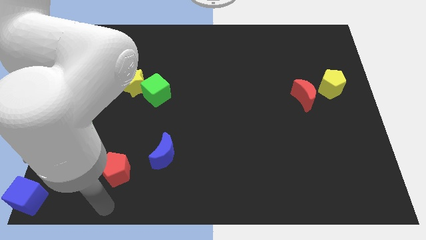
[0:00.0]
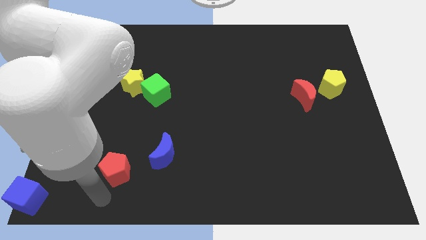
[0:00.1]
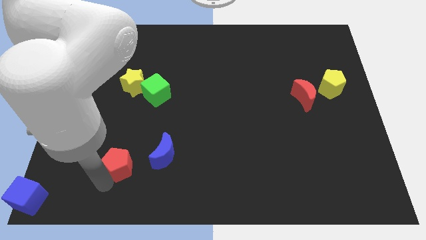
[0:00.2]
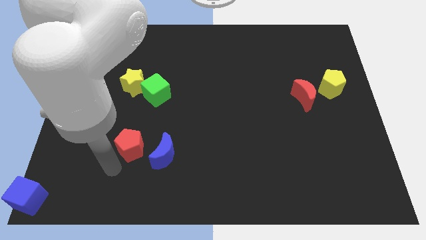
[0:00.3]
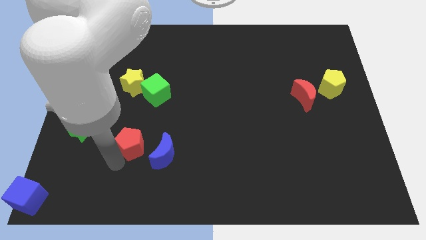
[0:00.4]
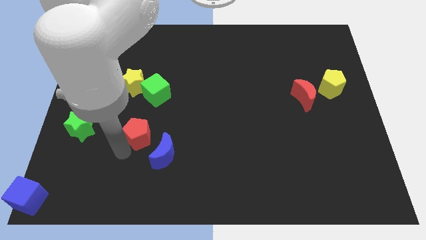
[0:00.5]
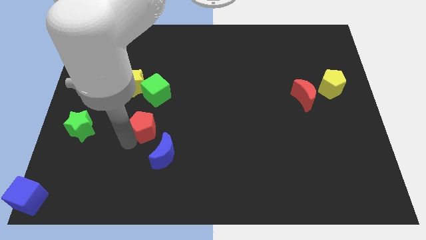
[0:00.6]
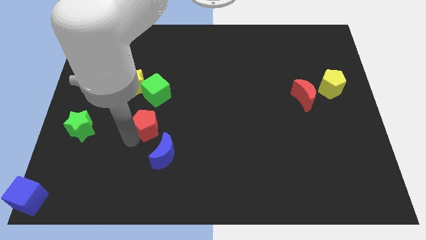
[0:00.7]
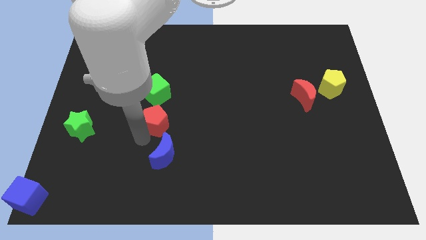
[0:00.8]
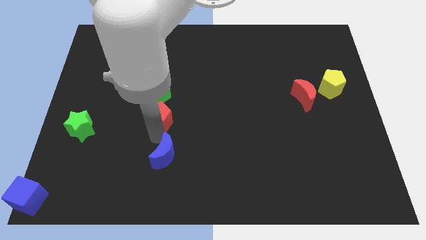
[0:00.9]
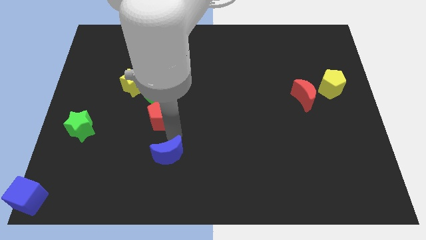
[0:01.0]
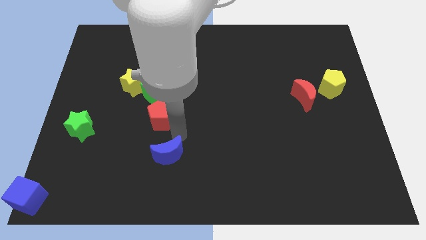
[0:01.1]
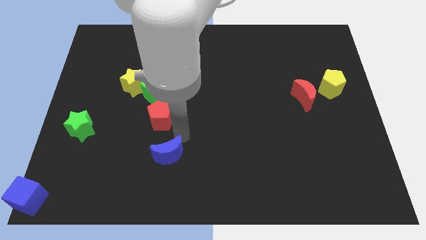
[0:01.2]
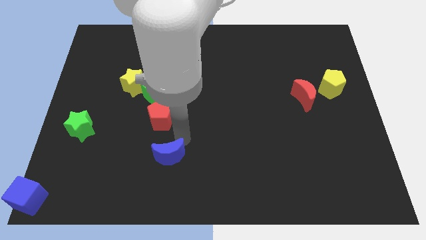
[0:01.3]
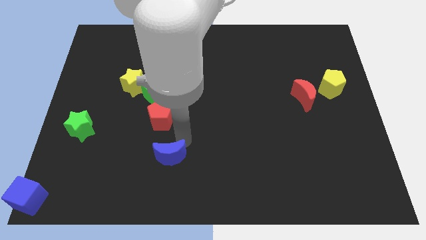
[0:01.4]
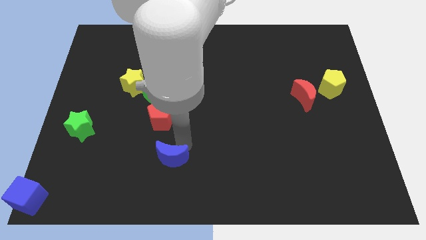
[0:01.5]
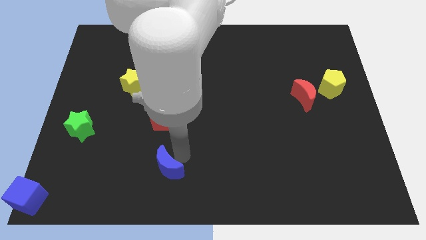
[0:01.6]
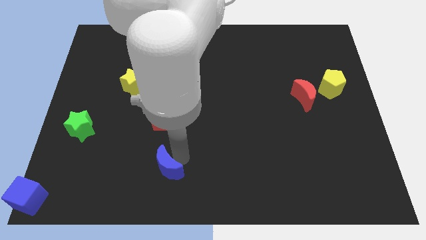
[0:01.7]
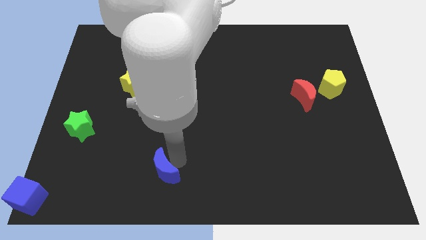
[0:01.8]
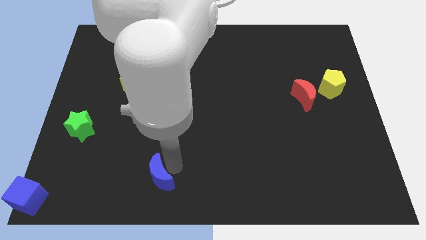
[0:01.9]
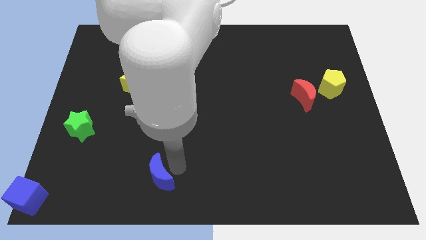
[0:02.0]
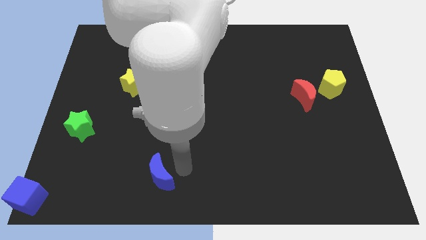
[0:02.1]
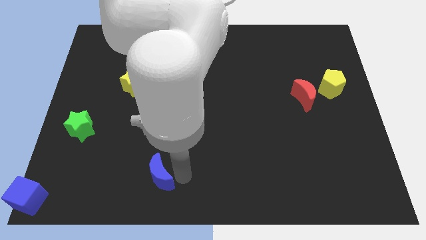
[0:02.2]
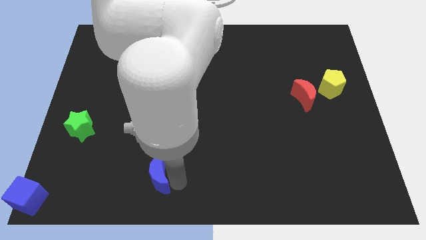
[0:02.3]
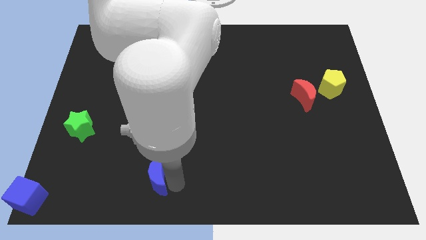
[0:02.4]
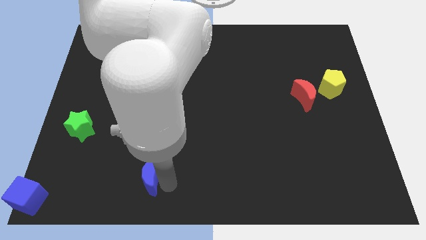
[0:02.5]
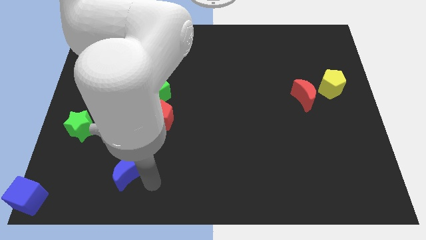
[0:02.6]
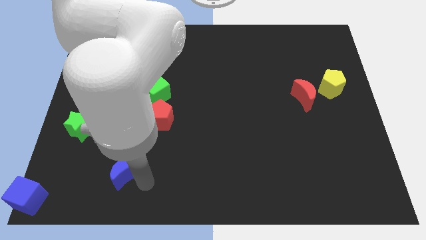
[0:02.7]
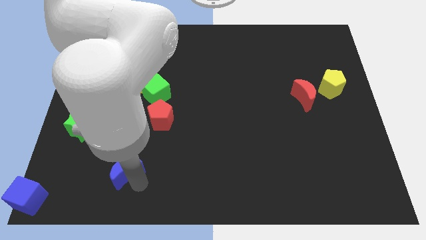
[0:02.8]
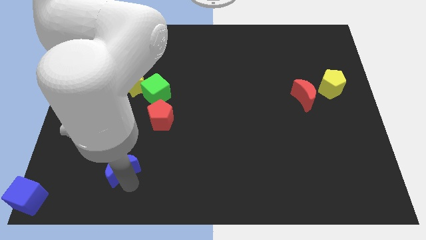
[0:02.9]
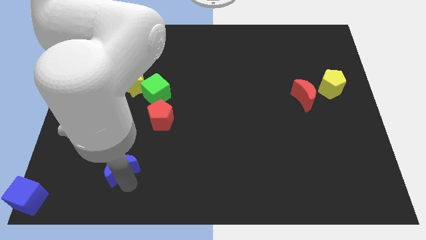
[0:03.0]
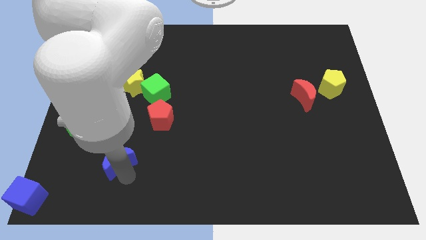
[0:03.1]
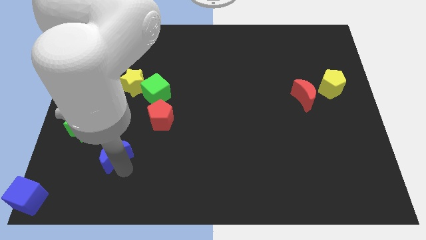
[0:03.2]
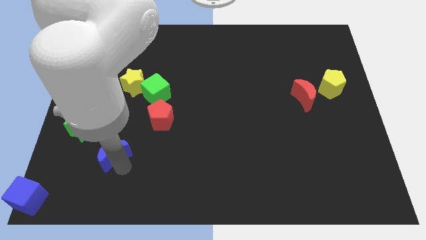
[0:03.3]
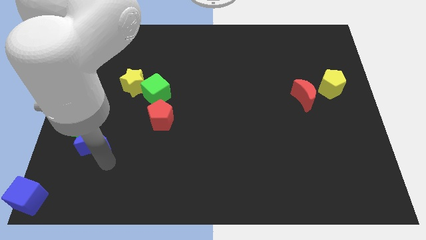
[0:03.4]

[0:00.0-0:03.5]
push blue crescent below green star

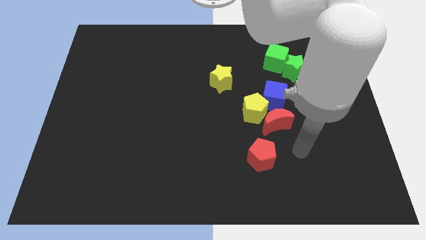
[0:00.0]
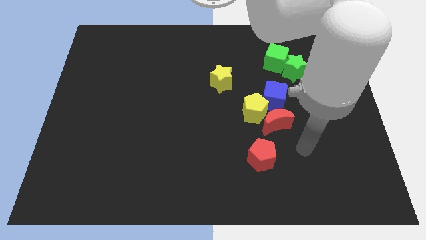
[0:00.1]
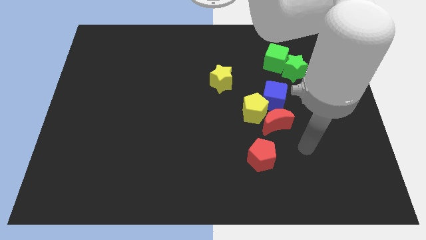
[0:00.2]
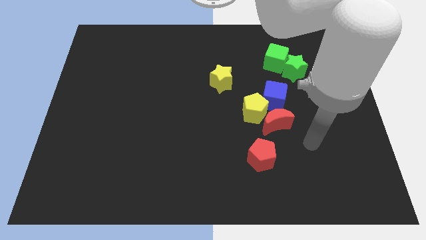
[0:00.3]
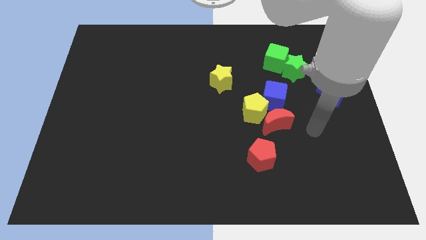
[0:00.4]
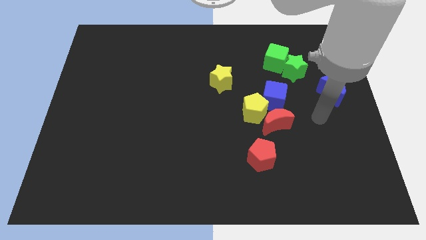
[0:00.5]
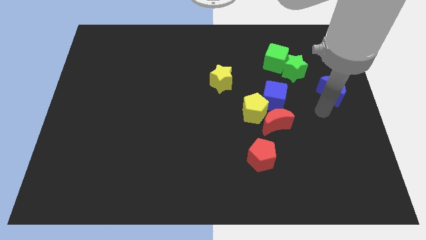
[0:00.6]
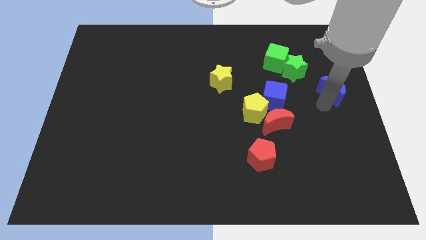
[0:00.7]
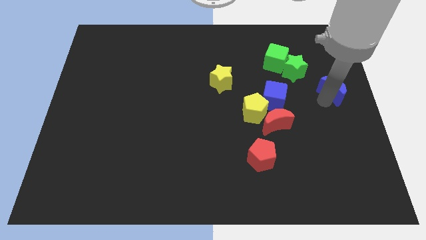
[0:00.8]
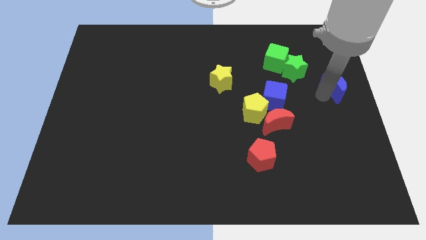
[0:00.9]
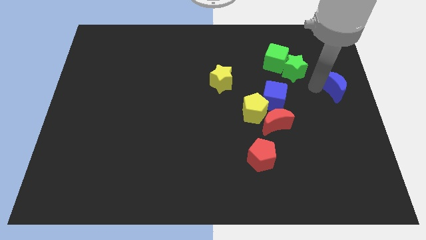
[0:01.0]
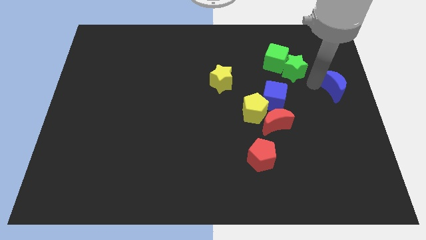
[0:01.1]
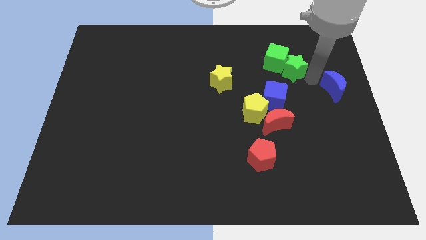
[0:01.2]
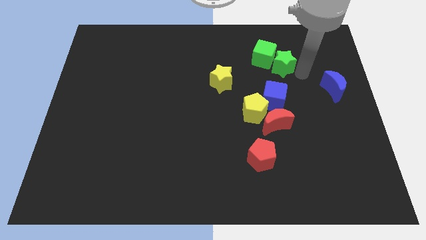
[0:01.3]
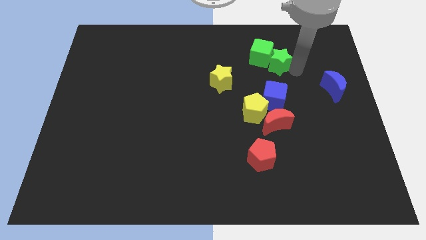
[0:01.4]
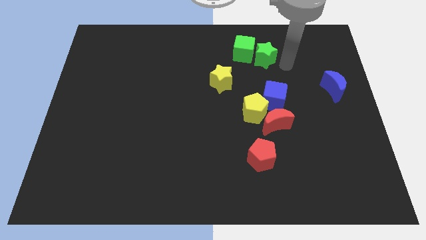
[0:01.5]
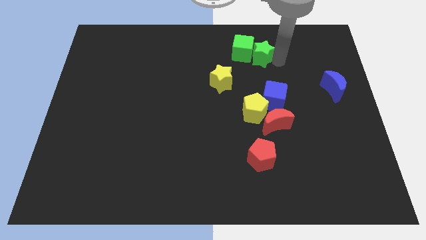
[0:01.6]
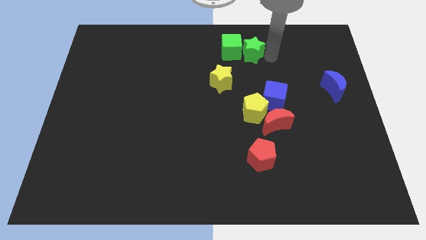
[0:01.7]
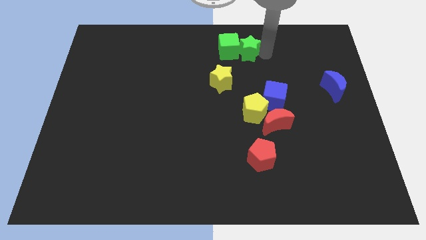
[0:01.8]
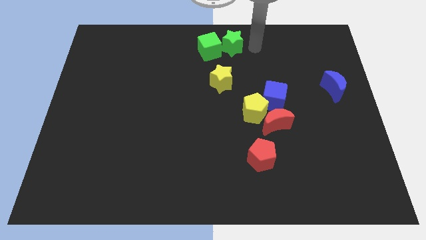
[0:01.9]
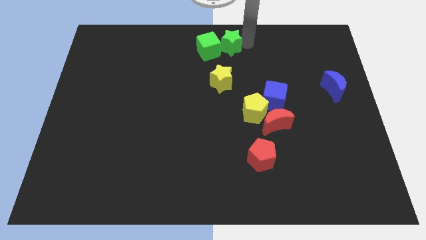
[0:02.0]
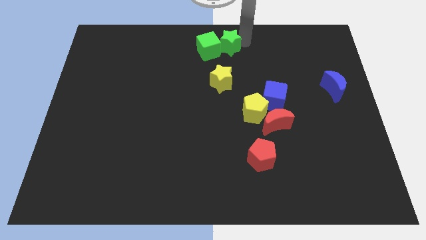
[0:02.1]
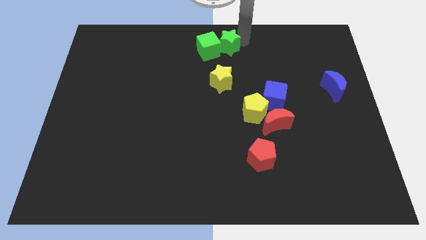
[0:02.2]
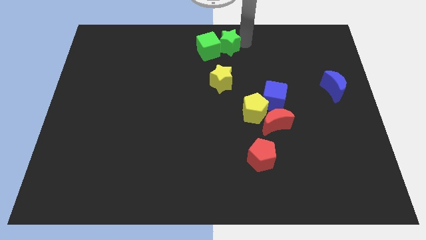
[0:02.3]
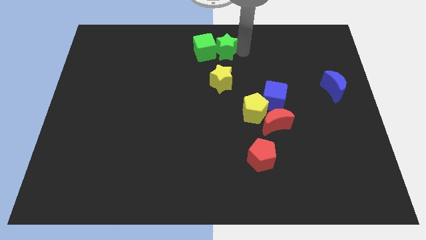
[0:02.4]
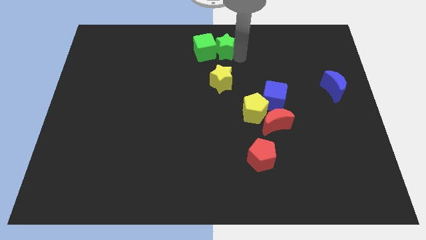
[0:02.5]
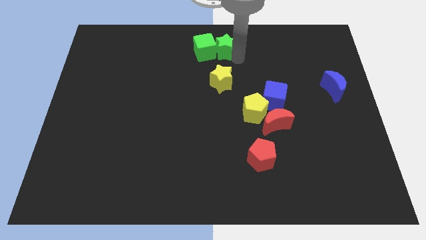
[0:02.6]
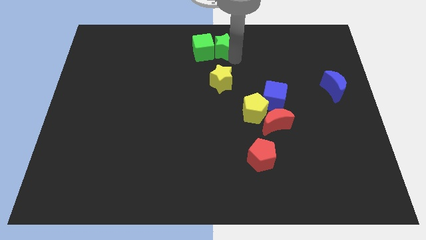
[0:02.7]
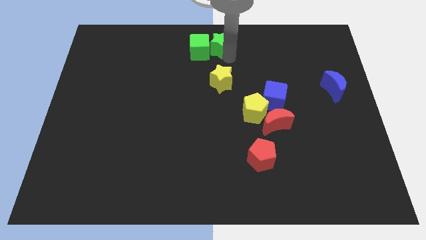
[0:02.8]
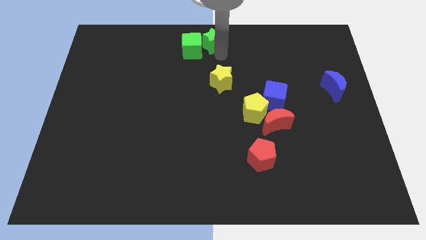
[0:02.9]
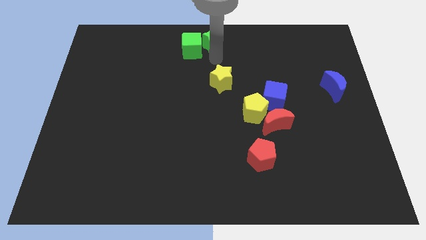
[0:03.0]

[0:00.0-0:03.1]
slide the green blocks towards the top center

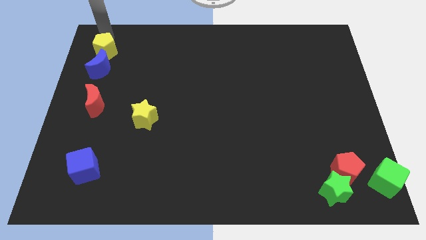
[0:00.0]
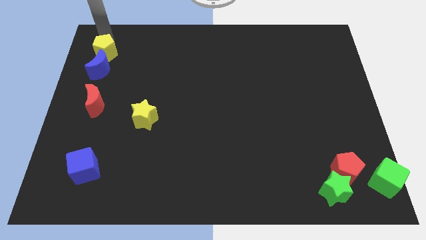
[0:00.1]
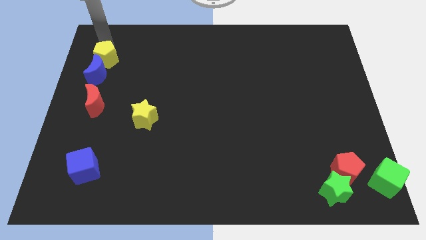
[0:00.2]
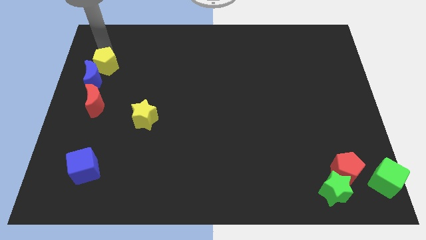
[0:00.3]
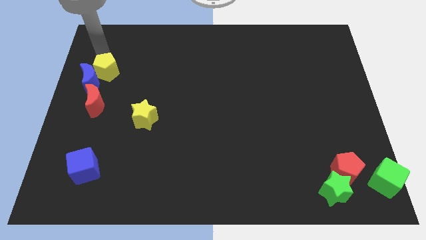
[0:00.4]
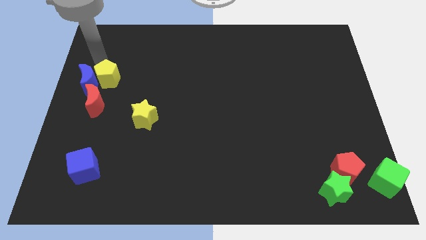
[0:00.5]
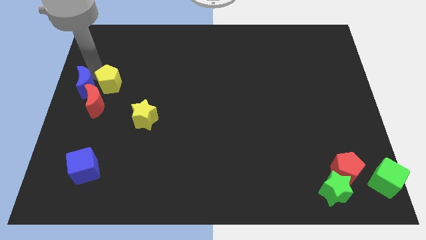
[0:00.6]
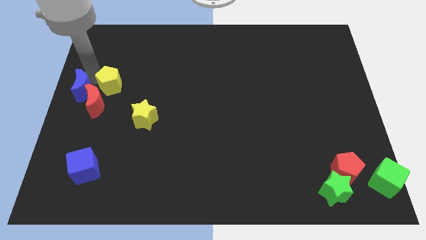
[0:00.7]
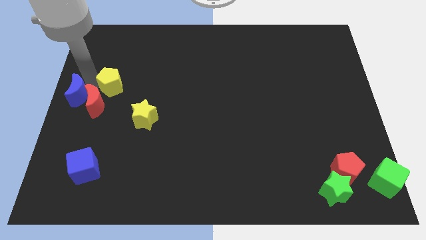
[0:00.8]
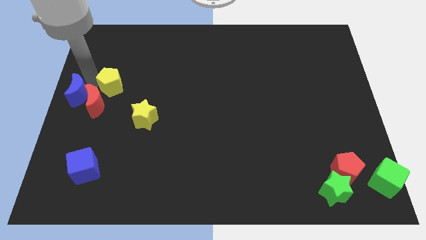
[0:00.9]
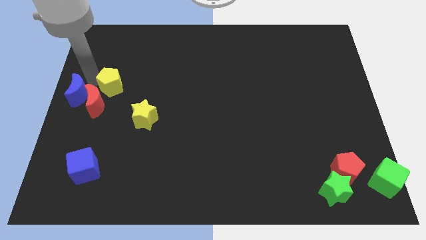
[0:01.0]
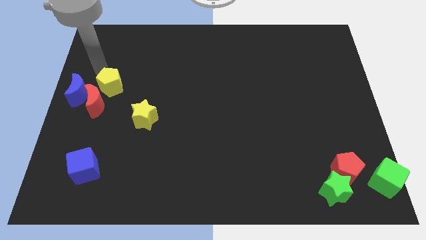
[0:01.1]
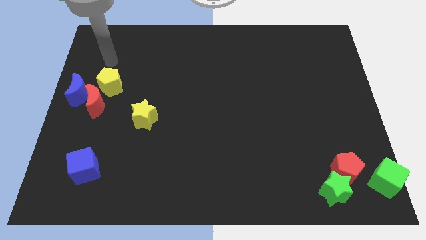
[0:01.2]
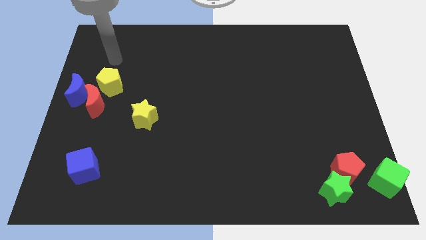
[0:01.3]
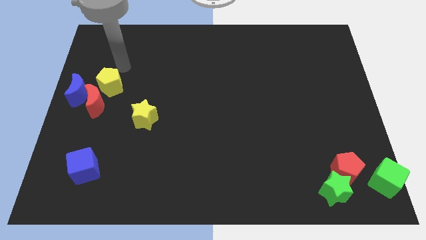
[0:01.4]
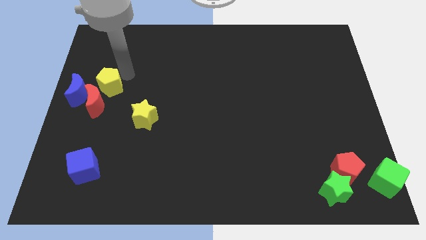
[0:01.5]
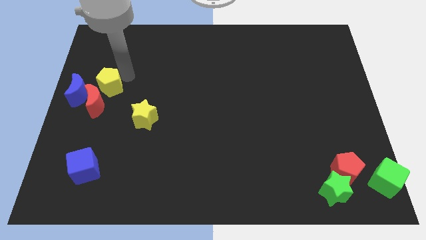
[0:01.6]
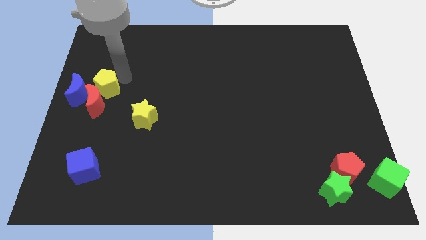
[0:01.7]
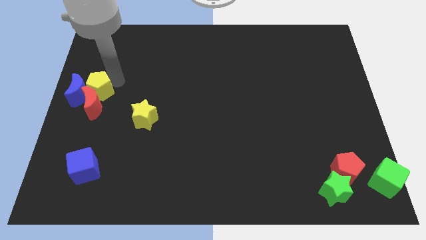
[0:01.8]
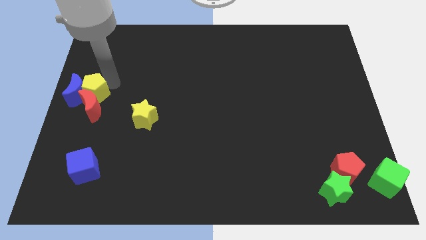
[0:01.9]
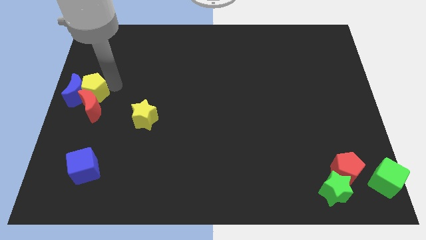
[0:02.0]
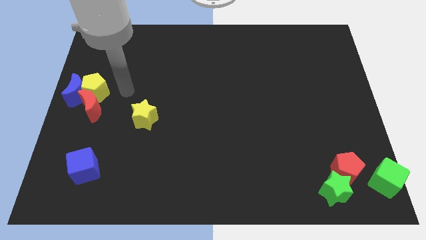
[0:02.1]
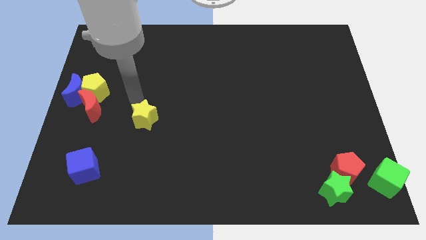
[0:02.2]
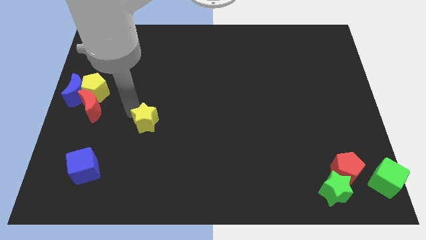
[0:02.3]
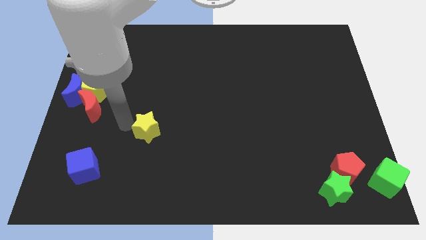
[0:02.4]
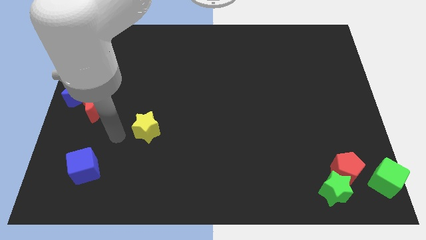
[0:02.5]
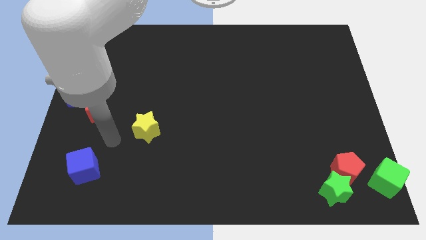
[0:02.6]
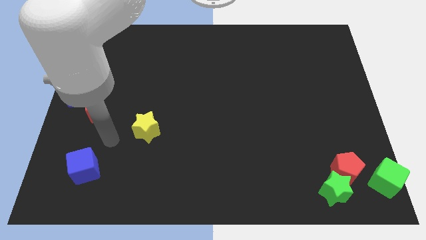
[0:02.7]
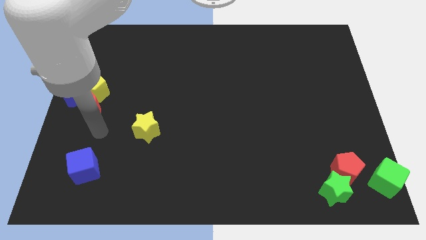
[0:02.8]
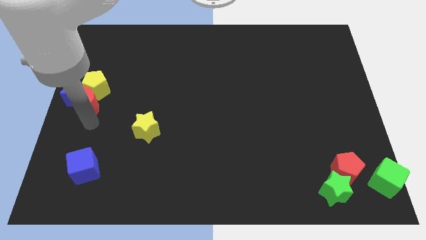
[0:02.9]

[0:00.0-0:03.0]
push the group of blocks towards center left
